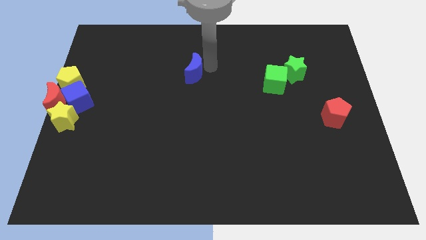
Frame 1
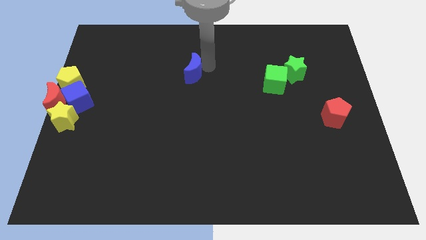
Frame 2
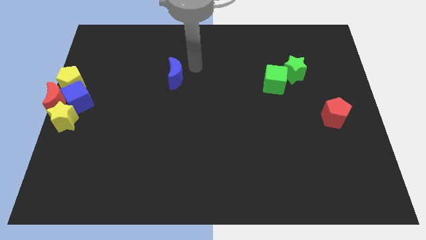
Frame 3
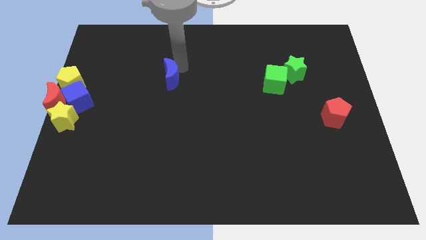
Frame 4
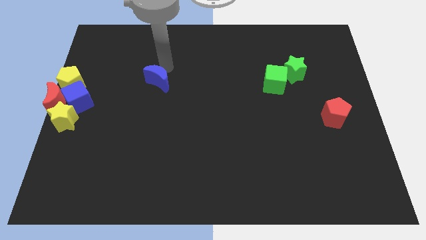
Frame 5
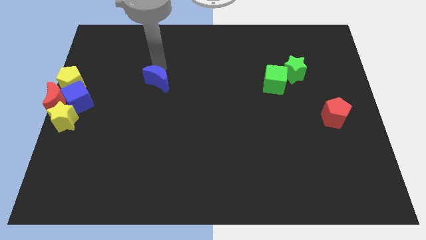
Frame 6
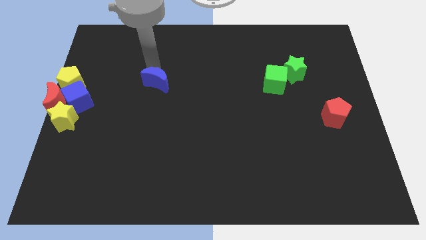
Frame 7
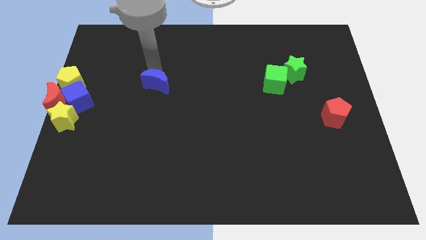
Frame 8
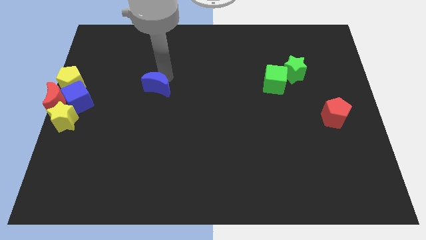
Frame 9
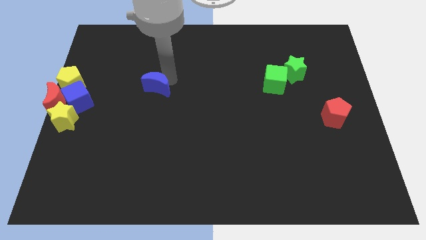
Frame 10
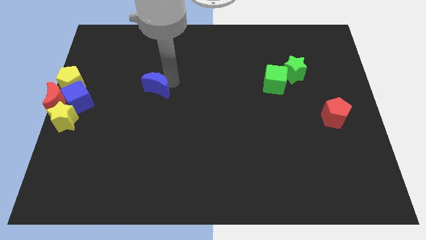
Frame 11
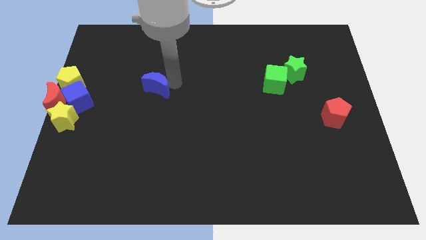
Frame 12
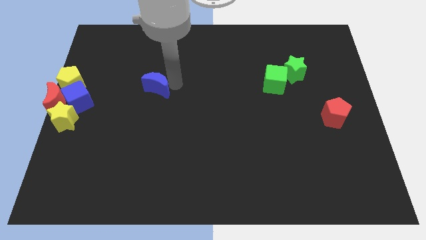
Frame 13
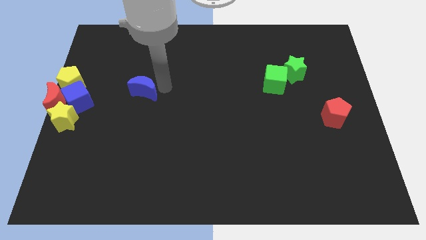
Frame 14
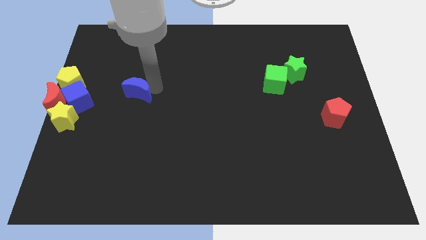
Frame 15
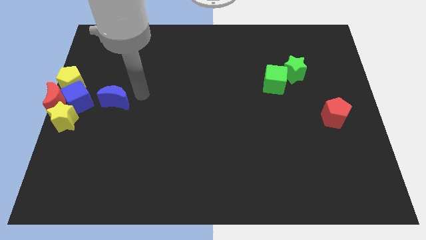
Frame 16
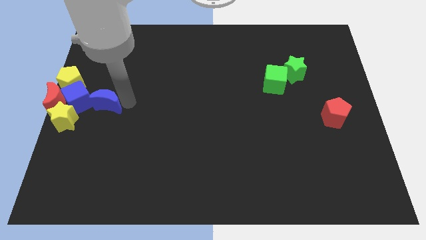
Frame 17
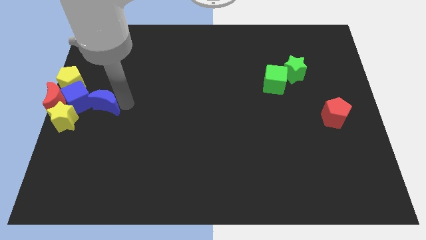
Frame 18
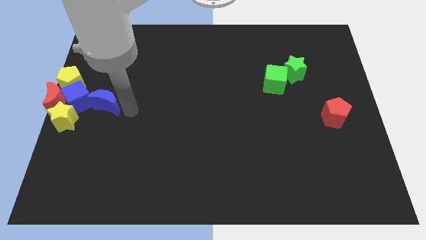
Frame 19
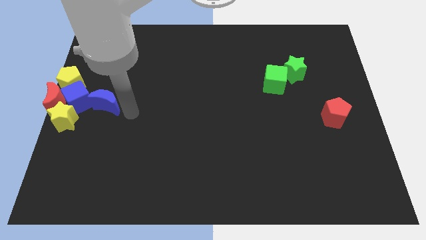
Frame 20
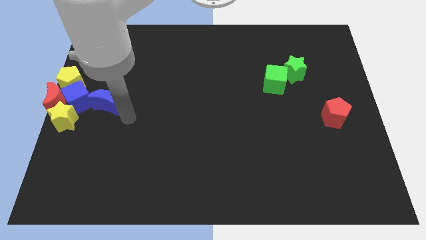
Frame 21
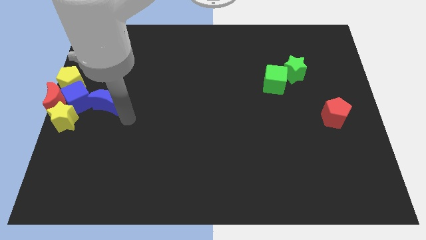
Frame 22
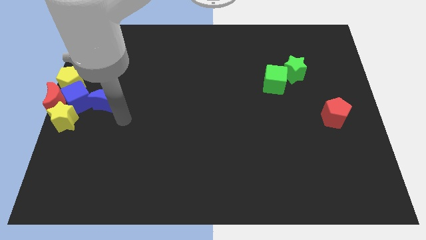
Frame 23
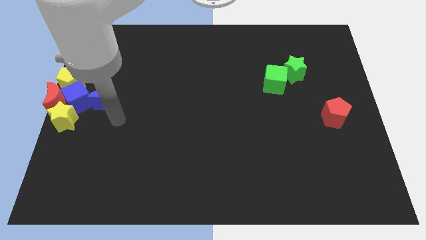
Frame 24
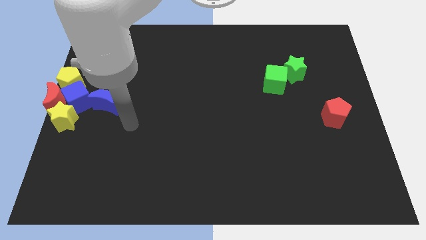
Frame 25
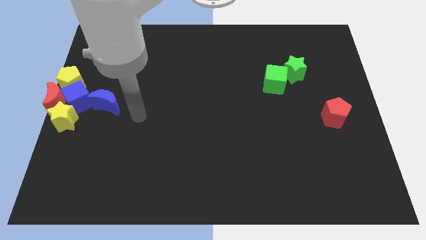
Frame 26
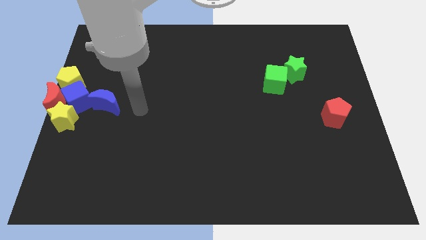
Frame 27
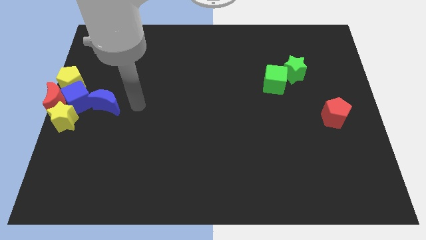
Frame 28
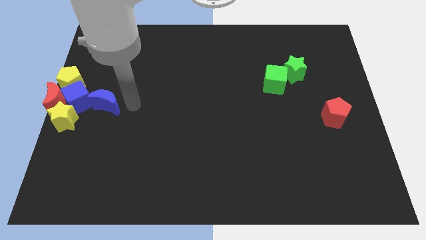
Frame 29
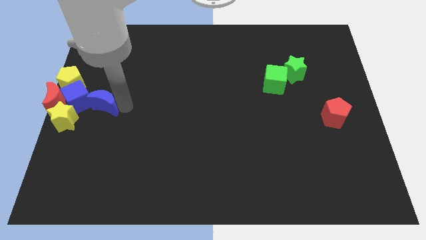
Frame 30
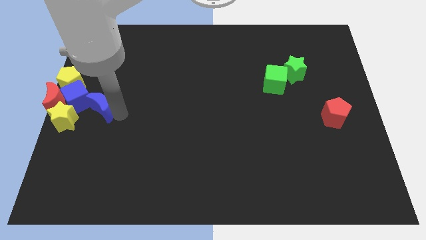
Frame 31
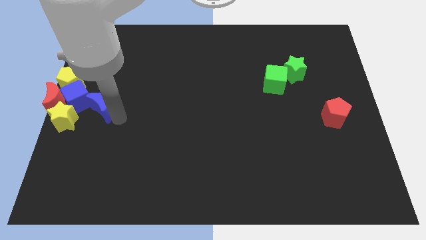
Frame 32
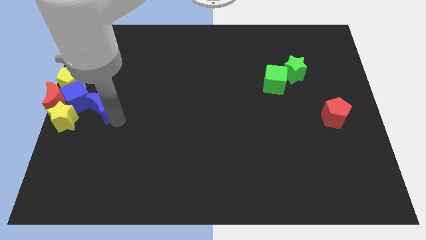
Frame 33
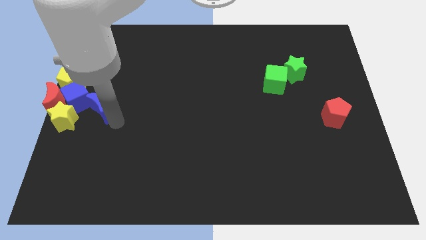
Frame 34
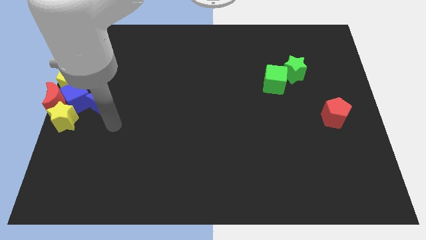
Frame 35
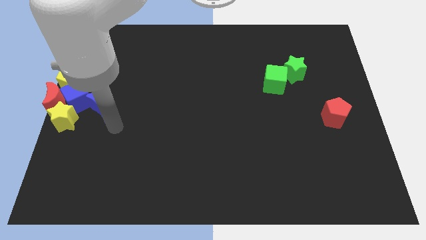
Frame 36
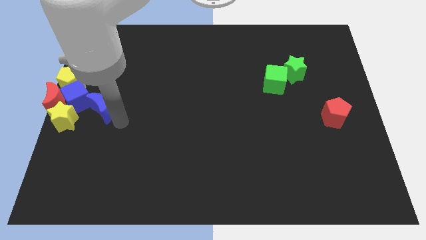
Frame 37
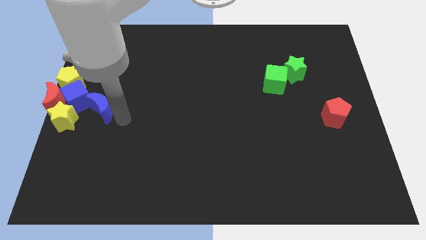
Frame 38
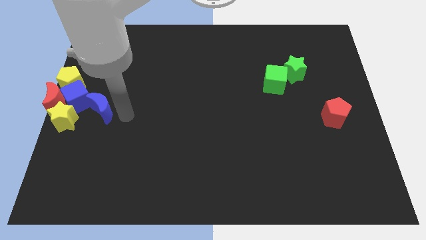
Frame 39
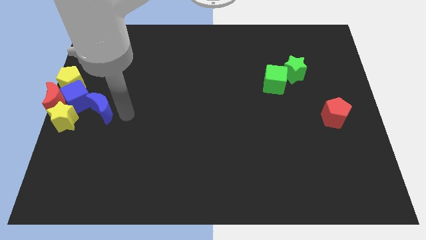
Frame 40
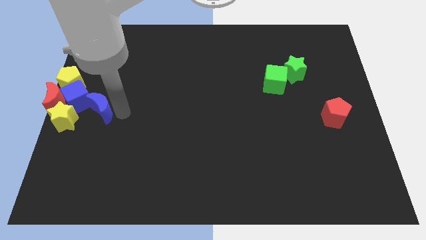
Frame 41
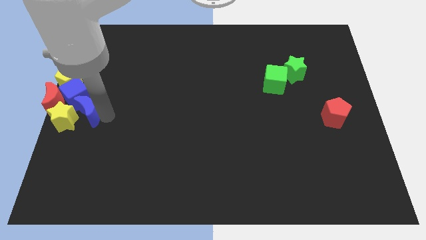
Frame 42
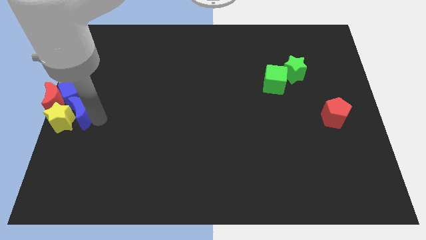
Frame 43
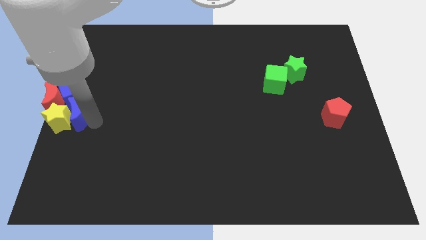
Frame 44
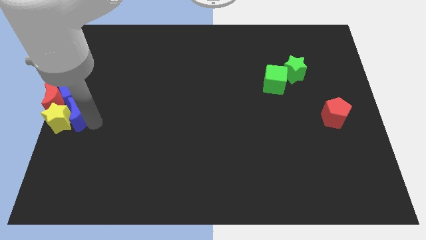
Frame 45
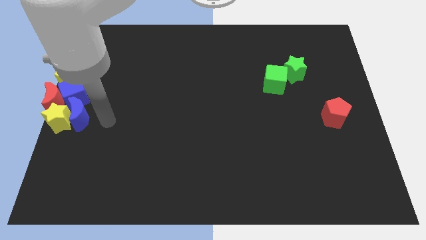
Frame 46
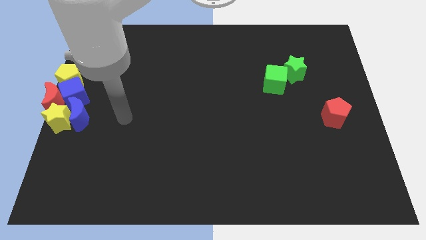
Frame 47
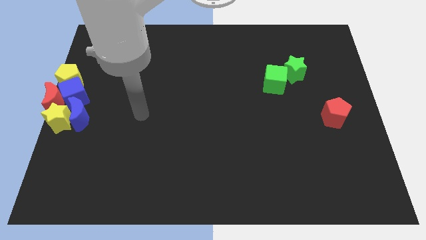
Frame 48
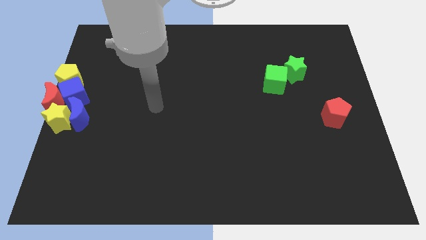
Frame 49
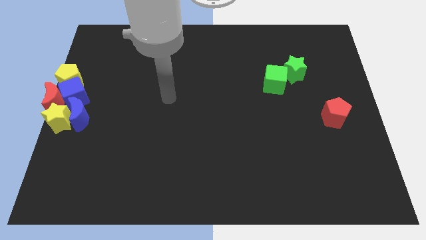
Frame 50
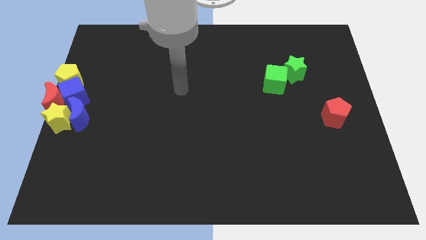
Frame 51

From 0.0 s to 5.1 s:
push the blue crescent into the right side of the yellow star

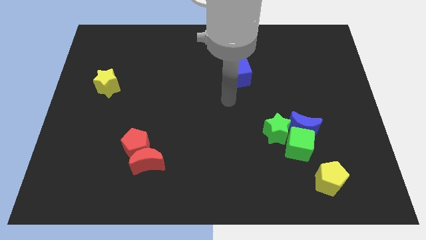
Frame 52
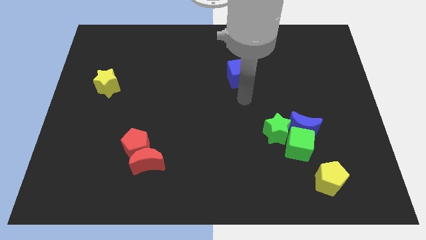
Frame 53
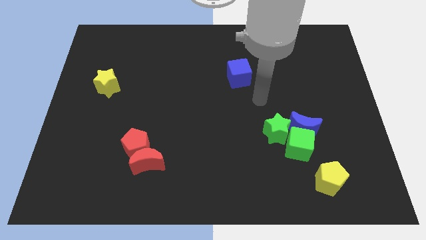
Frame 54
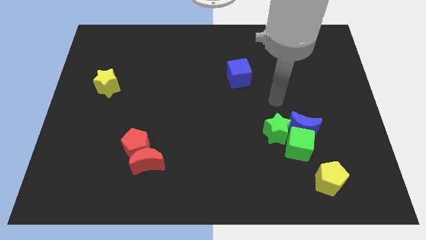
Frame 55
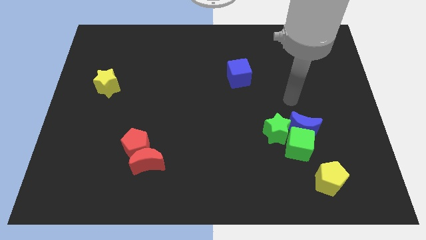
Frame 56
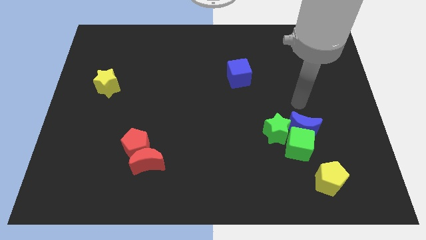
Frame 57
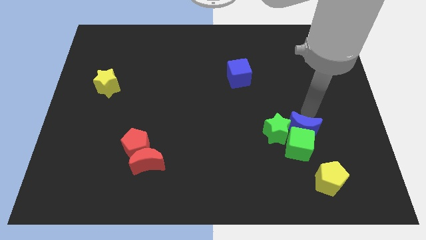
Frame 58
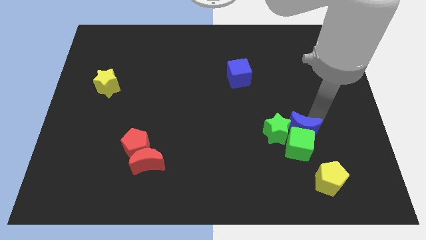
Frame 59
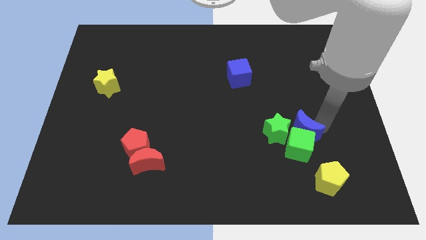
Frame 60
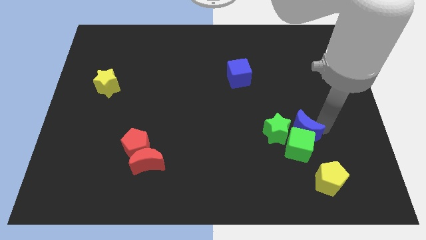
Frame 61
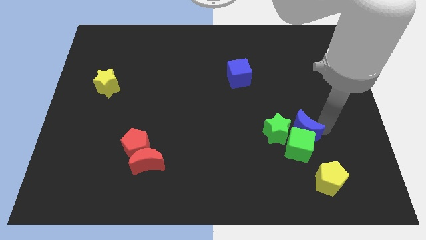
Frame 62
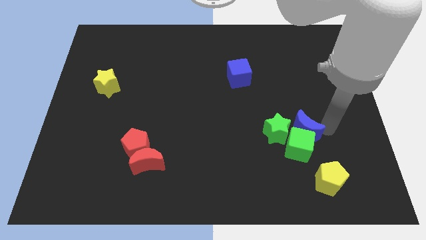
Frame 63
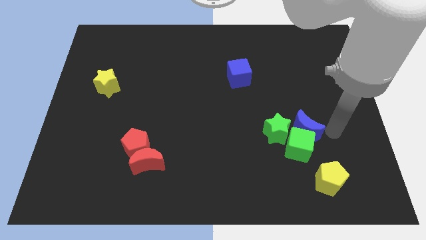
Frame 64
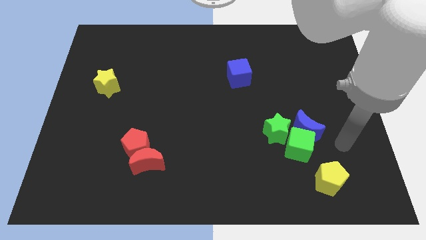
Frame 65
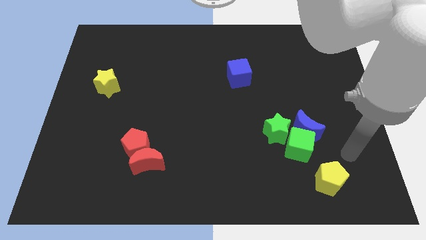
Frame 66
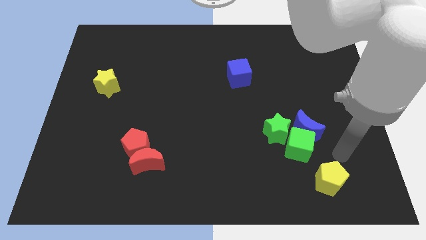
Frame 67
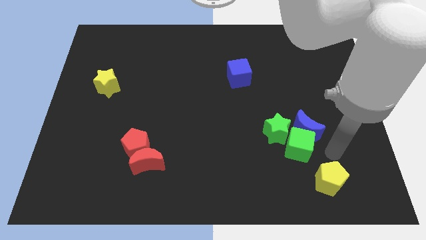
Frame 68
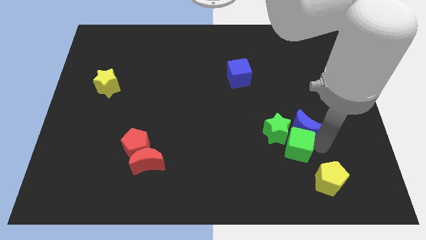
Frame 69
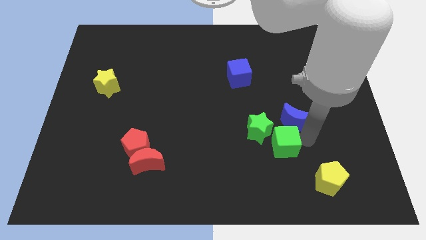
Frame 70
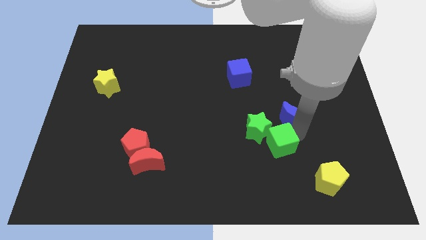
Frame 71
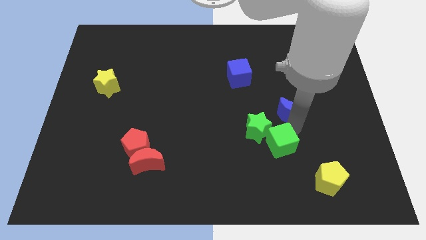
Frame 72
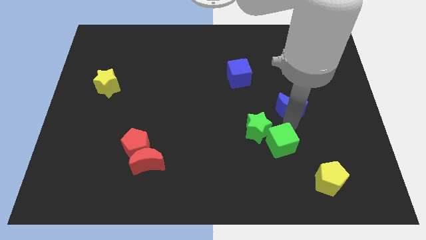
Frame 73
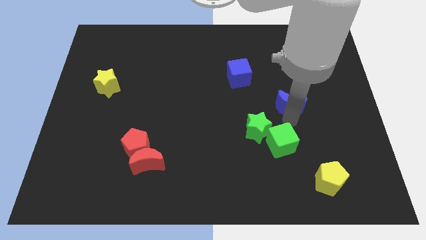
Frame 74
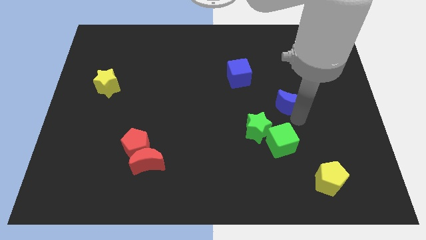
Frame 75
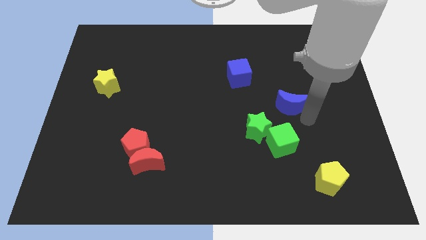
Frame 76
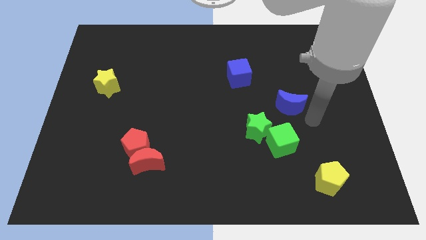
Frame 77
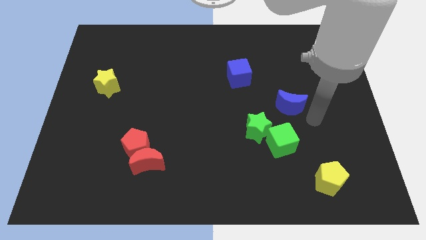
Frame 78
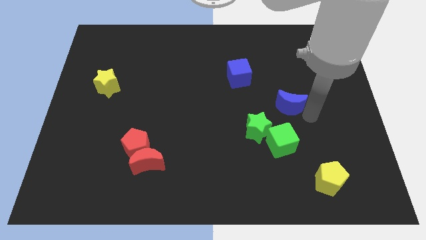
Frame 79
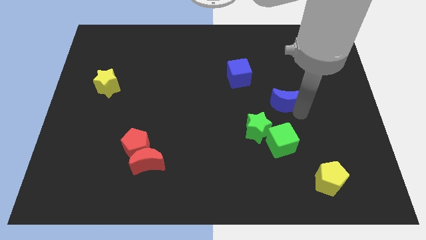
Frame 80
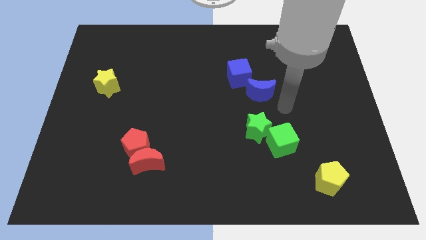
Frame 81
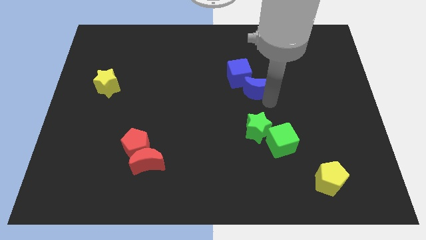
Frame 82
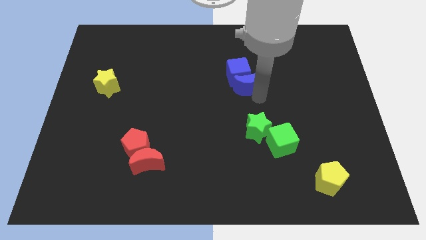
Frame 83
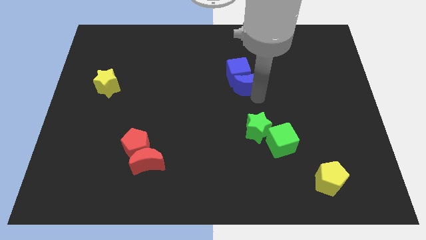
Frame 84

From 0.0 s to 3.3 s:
push the blue moon into the blue cube

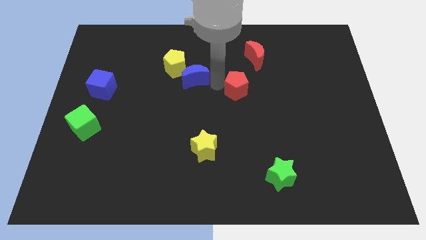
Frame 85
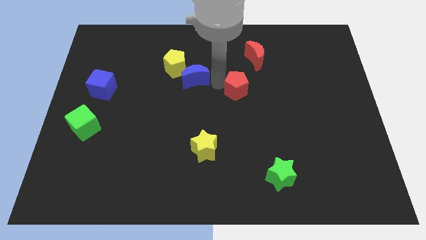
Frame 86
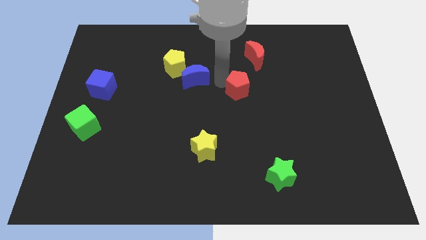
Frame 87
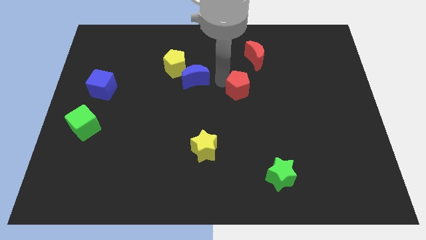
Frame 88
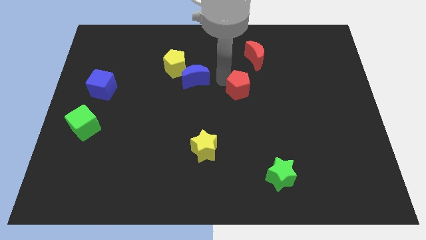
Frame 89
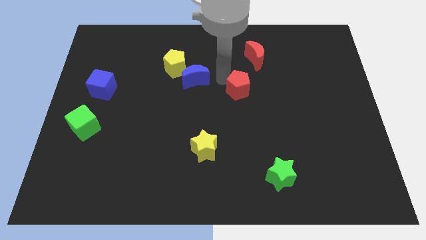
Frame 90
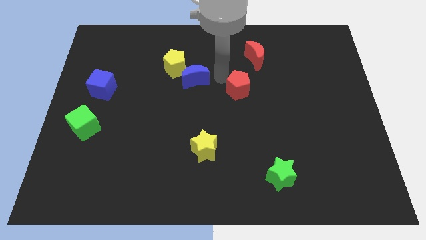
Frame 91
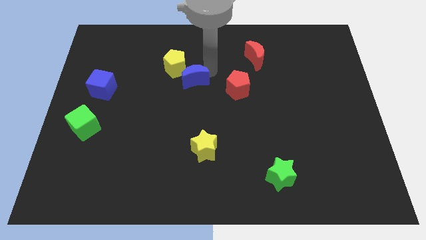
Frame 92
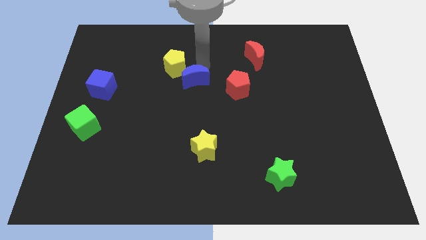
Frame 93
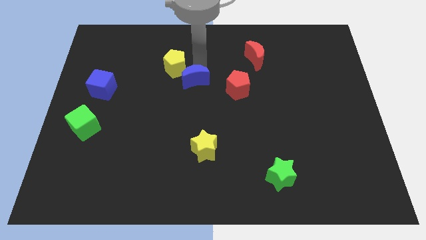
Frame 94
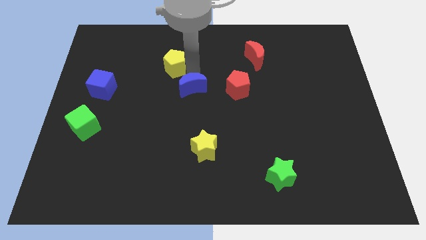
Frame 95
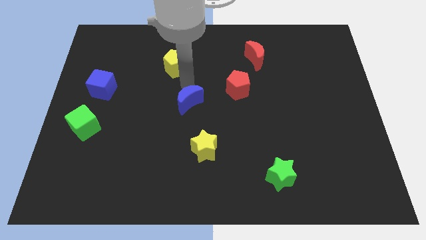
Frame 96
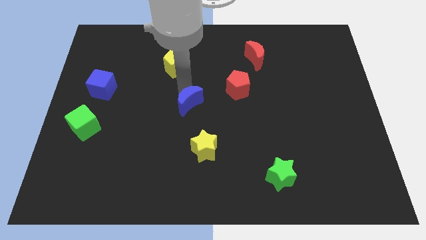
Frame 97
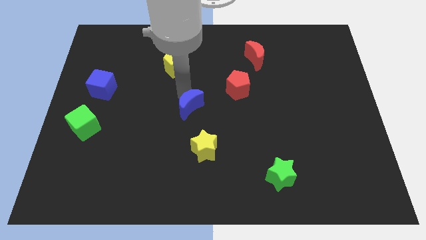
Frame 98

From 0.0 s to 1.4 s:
push the blue crescent towards the yellow star
